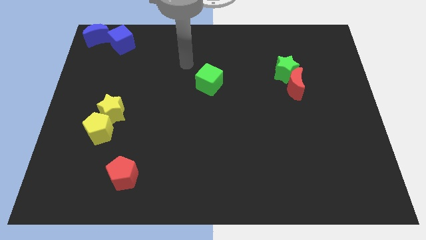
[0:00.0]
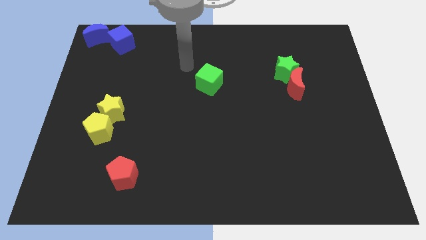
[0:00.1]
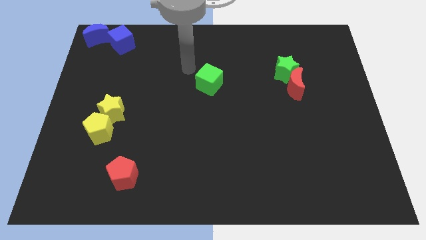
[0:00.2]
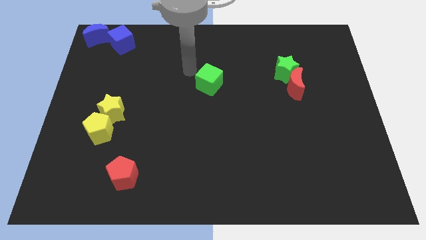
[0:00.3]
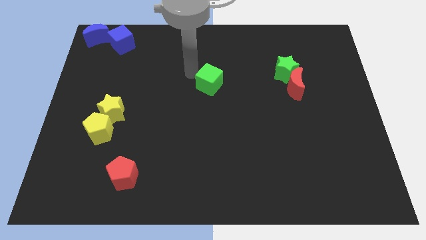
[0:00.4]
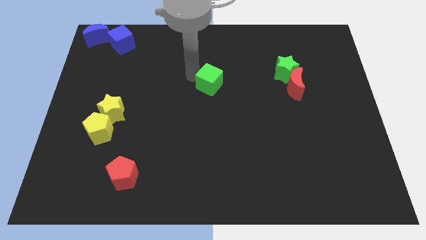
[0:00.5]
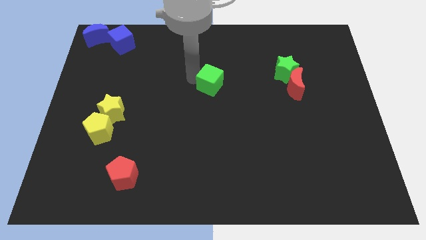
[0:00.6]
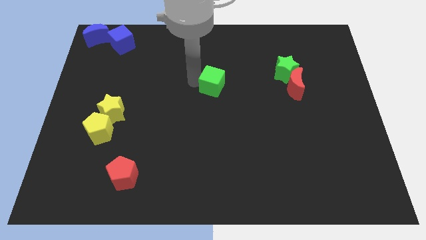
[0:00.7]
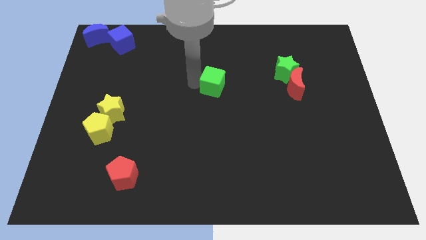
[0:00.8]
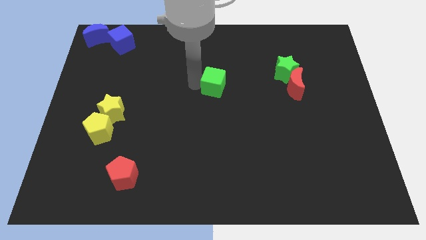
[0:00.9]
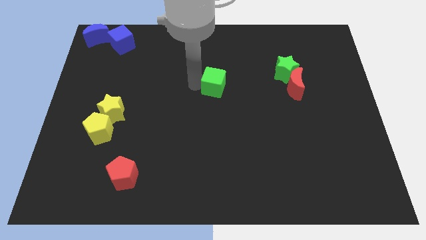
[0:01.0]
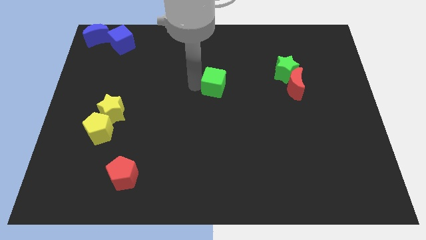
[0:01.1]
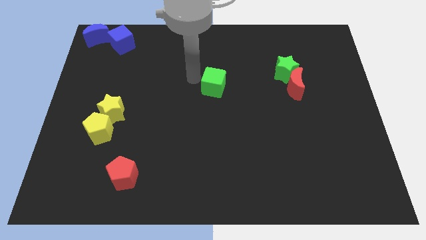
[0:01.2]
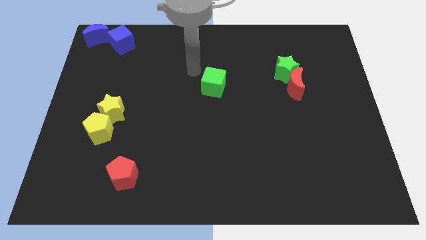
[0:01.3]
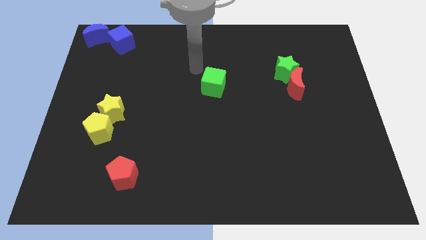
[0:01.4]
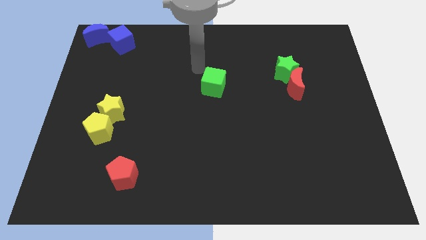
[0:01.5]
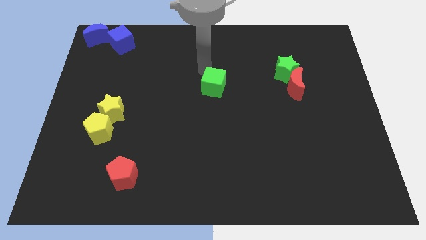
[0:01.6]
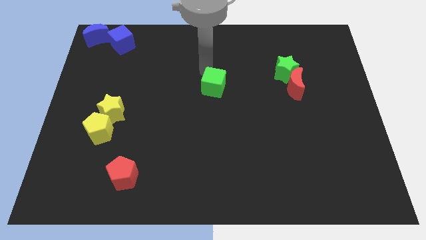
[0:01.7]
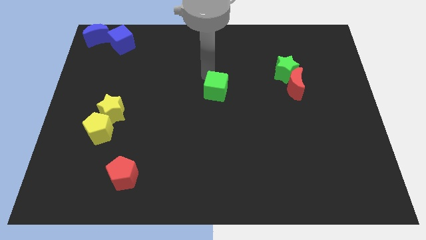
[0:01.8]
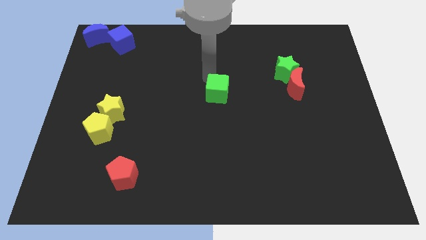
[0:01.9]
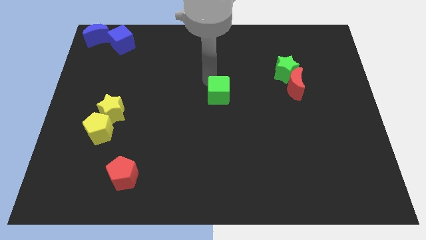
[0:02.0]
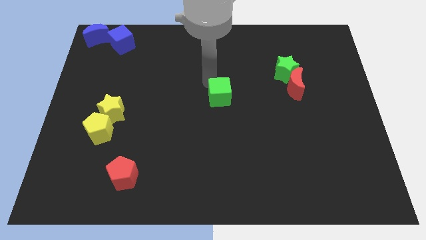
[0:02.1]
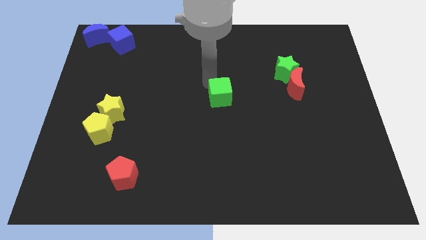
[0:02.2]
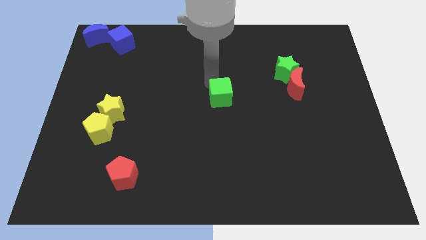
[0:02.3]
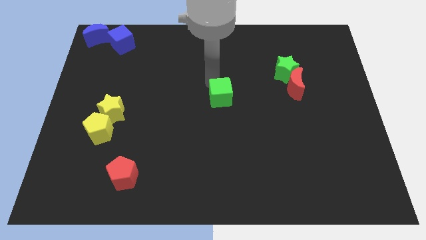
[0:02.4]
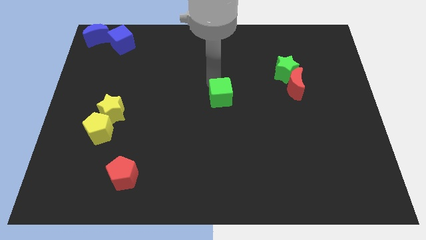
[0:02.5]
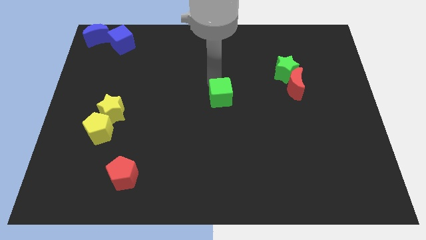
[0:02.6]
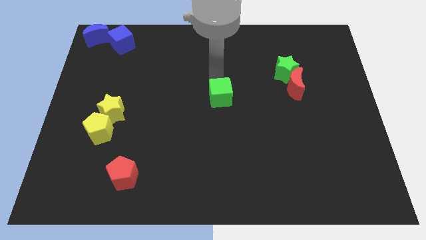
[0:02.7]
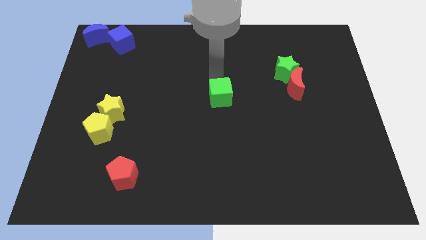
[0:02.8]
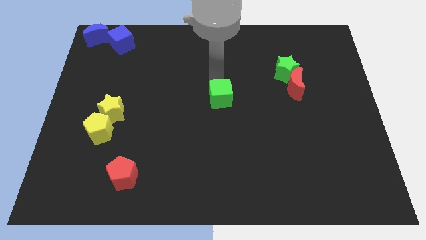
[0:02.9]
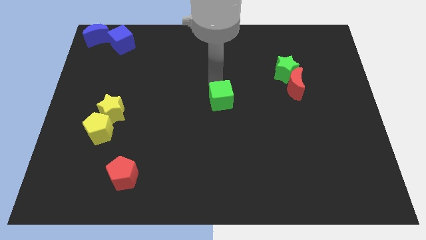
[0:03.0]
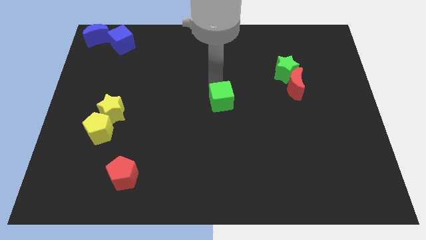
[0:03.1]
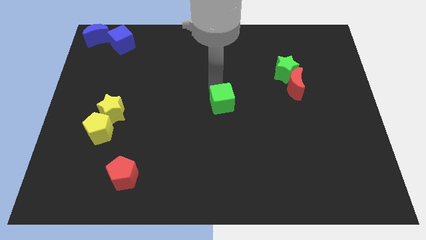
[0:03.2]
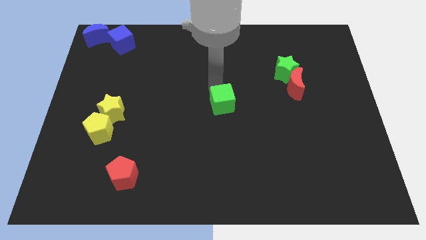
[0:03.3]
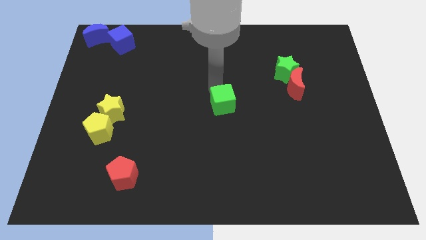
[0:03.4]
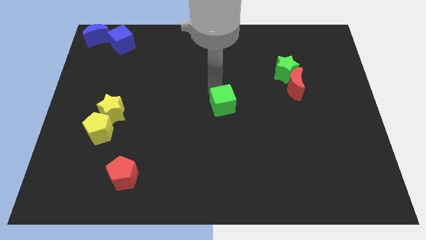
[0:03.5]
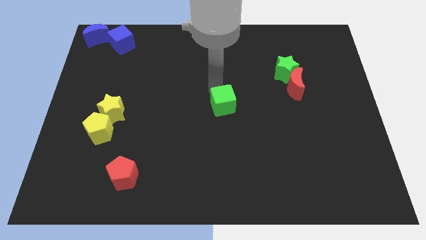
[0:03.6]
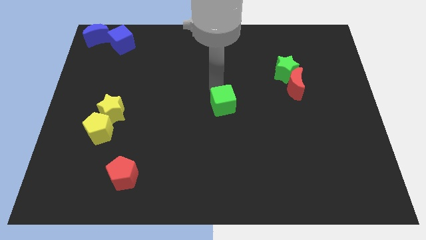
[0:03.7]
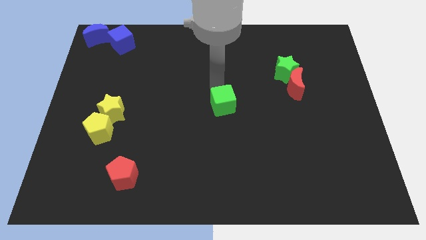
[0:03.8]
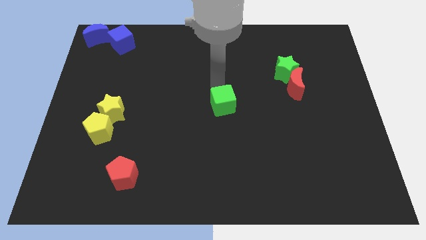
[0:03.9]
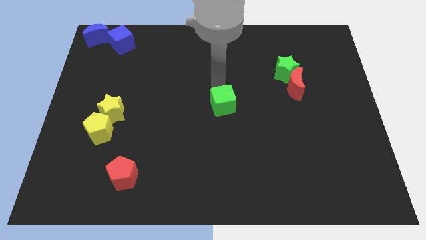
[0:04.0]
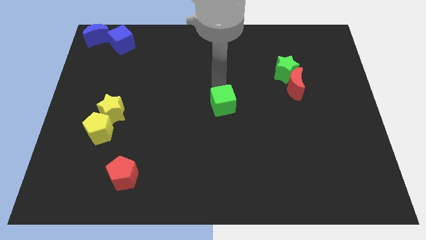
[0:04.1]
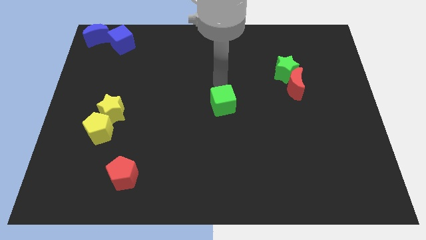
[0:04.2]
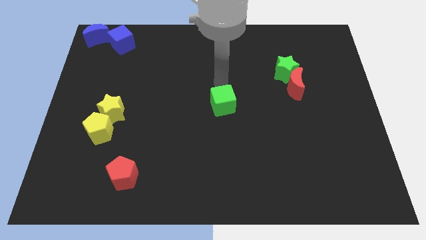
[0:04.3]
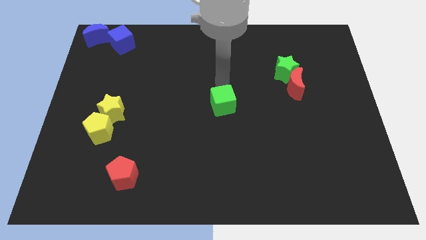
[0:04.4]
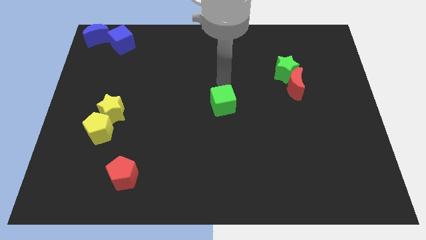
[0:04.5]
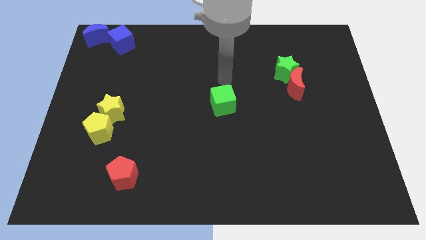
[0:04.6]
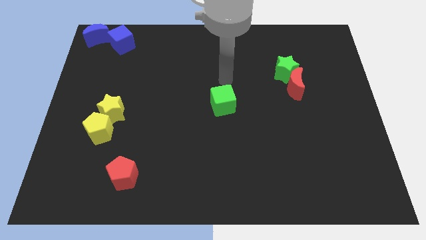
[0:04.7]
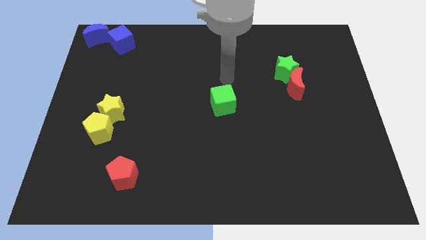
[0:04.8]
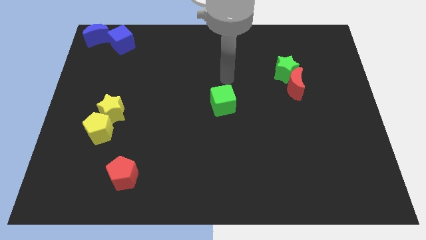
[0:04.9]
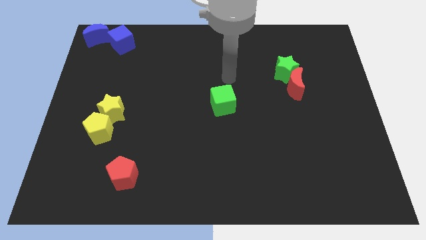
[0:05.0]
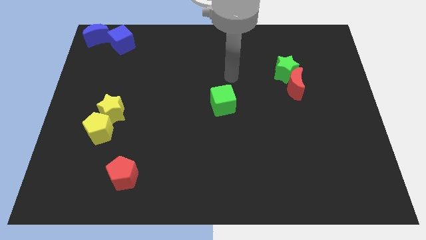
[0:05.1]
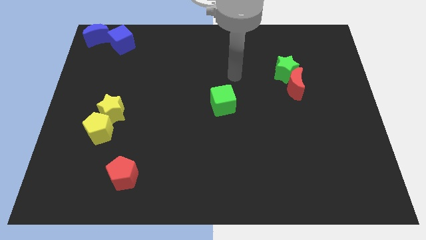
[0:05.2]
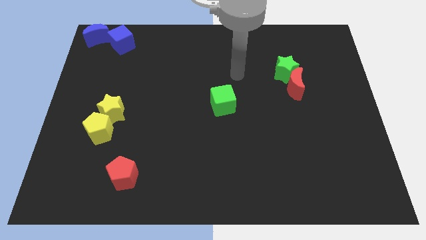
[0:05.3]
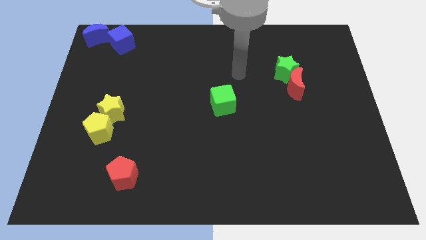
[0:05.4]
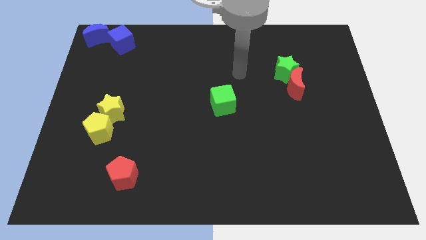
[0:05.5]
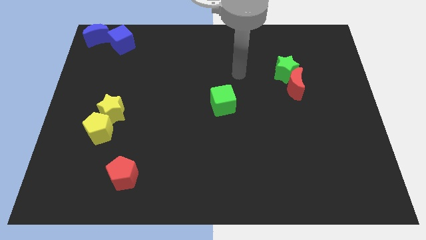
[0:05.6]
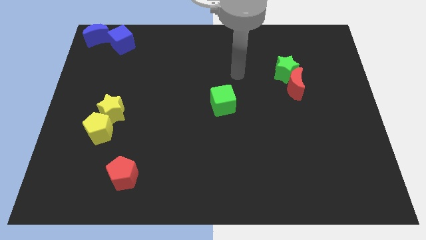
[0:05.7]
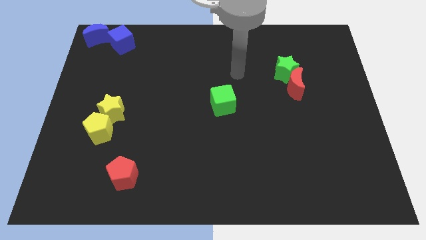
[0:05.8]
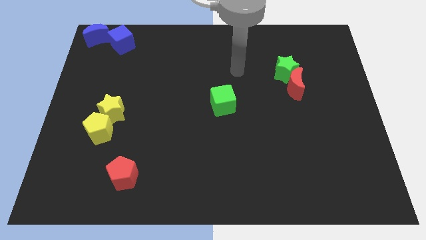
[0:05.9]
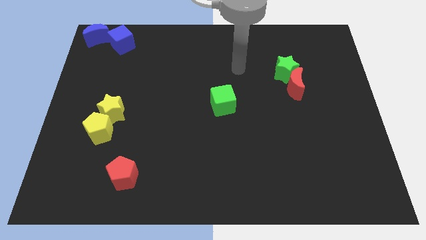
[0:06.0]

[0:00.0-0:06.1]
slightly move the green cube to the center

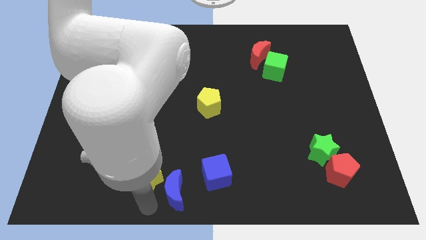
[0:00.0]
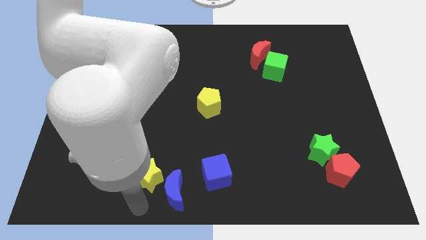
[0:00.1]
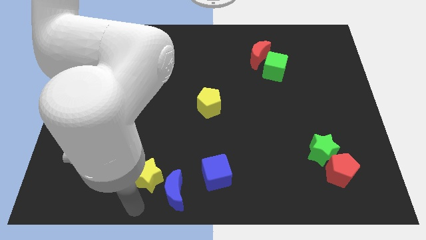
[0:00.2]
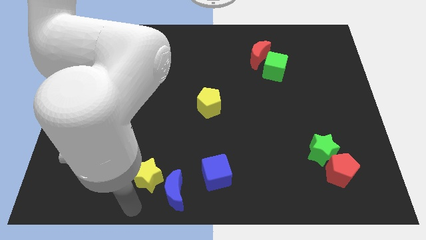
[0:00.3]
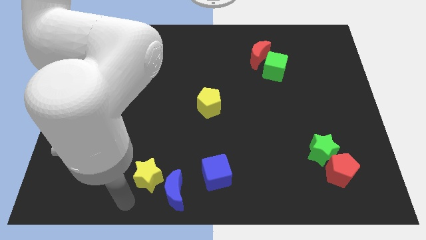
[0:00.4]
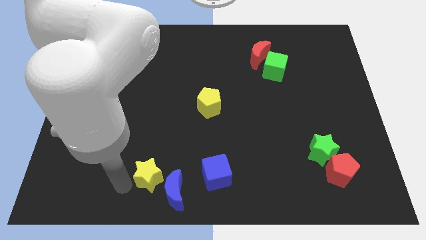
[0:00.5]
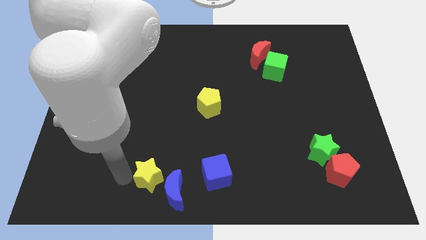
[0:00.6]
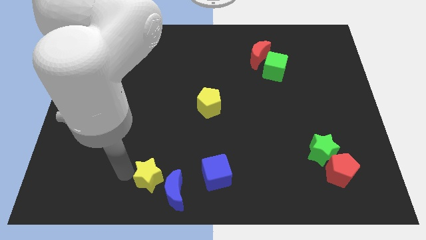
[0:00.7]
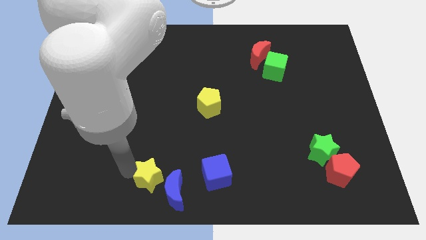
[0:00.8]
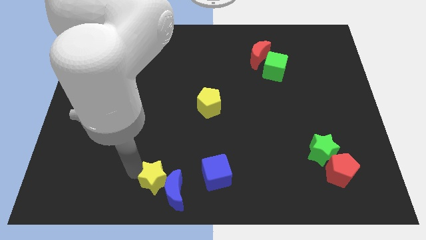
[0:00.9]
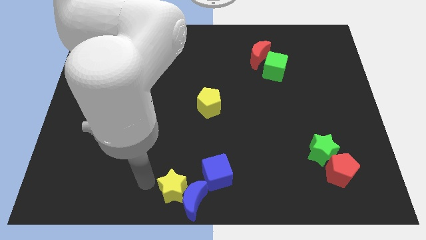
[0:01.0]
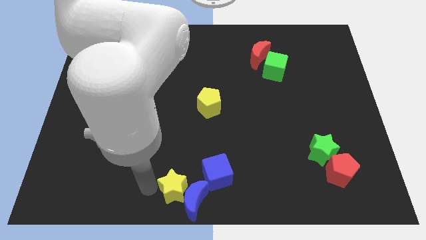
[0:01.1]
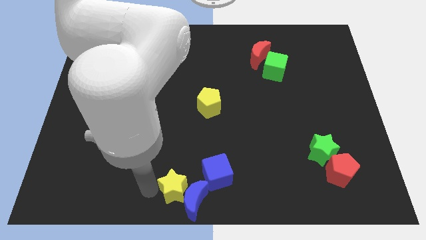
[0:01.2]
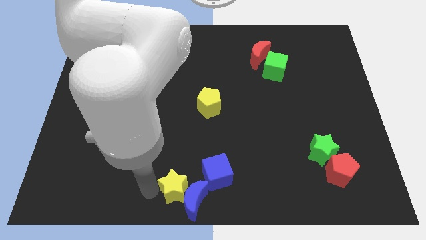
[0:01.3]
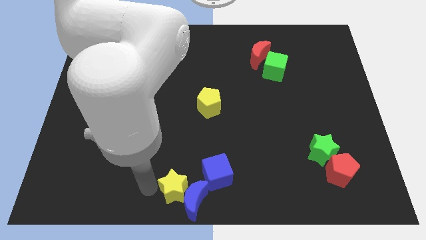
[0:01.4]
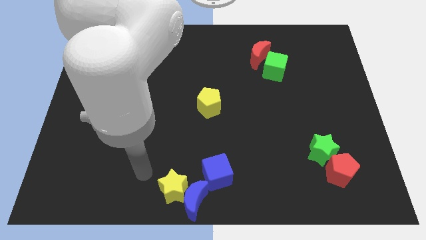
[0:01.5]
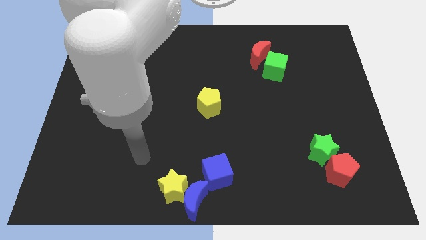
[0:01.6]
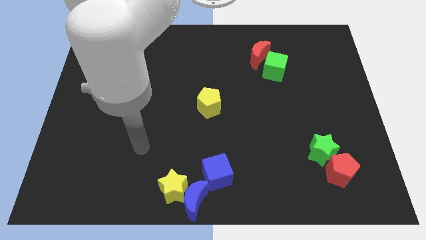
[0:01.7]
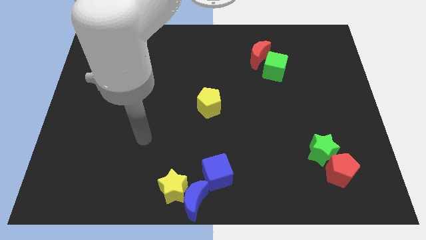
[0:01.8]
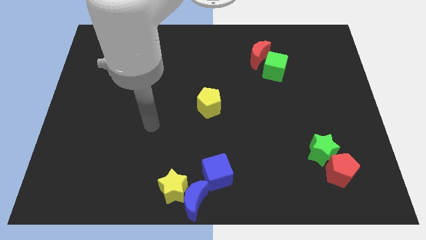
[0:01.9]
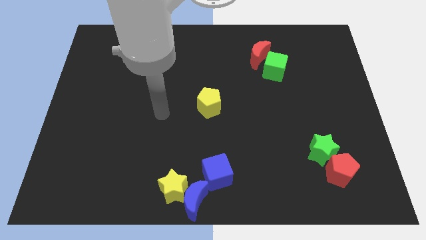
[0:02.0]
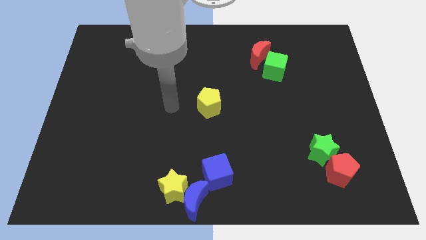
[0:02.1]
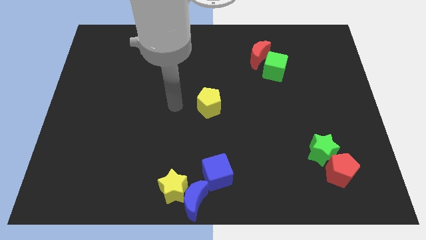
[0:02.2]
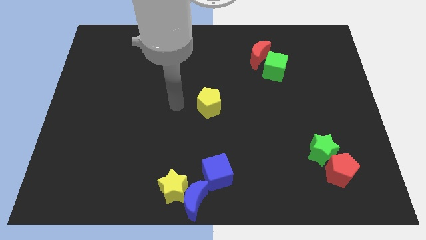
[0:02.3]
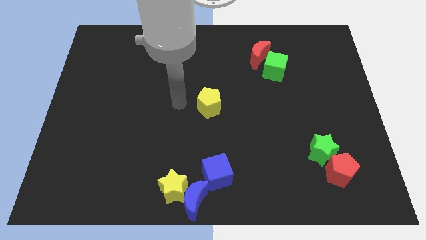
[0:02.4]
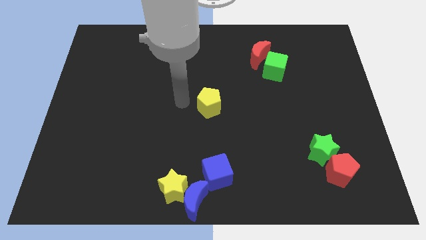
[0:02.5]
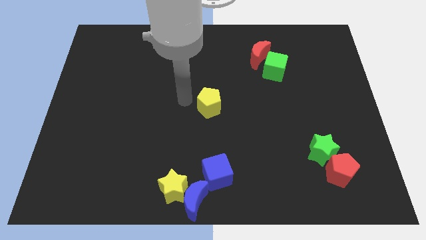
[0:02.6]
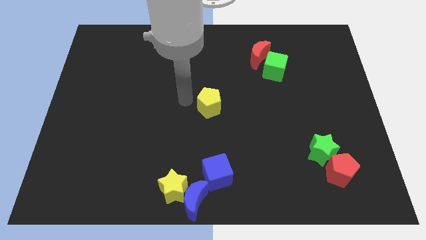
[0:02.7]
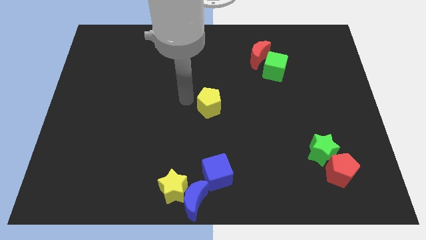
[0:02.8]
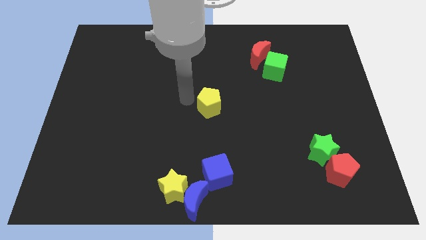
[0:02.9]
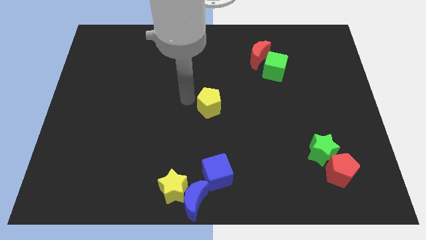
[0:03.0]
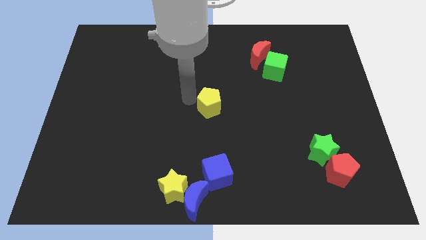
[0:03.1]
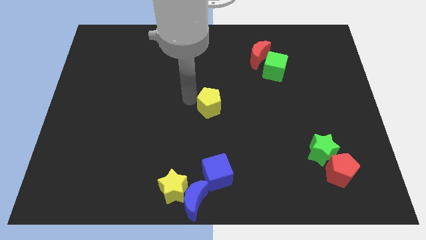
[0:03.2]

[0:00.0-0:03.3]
push the yellow star into the blue moon
